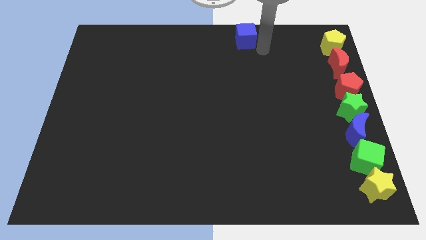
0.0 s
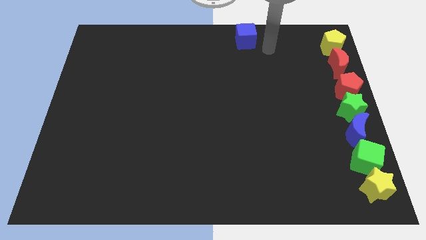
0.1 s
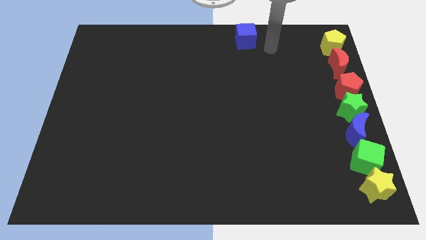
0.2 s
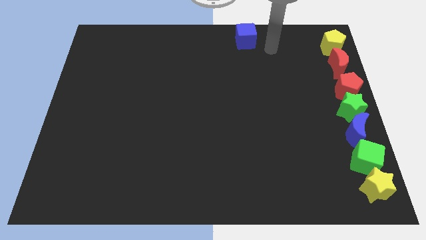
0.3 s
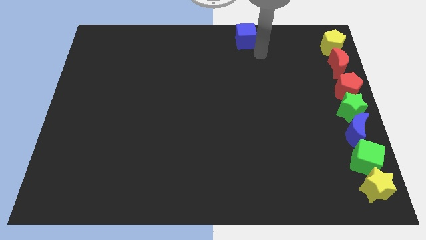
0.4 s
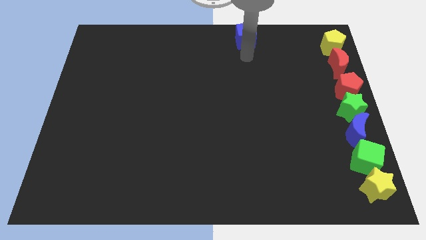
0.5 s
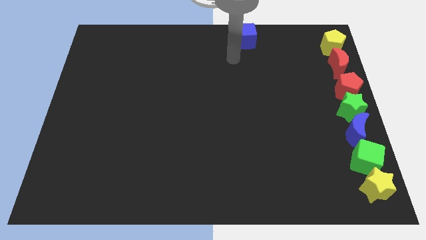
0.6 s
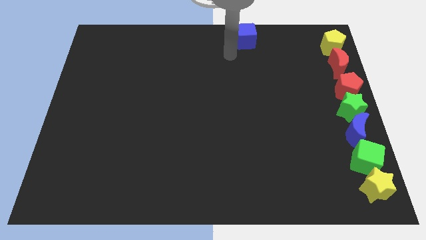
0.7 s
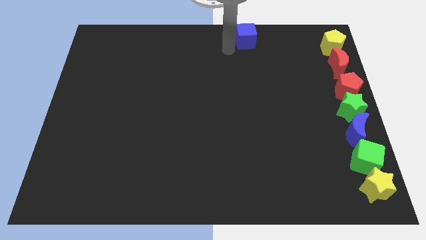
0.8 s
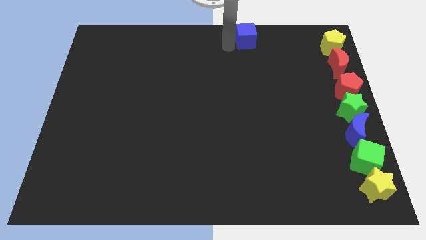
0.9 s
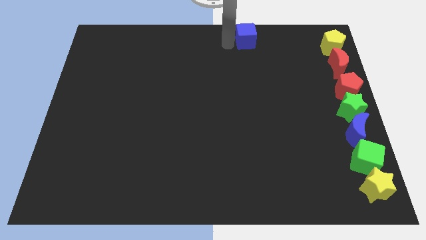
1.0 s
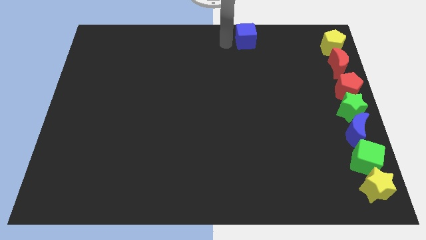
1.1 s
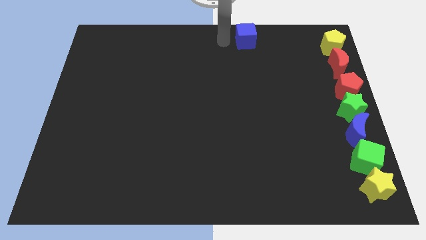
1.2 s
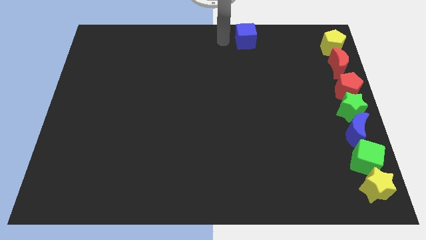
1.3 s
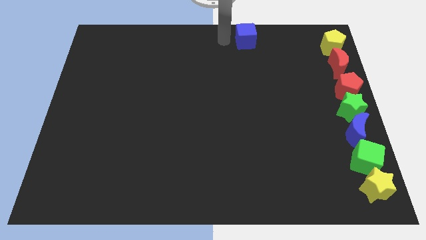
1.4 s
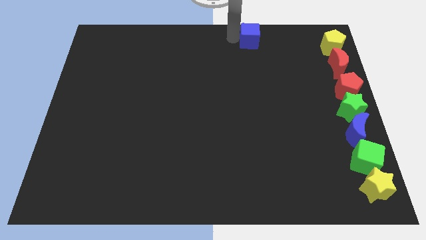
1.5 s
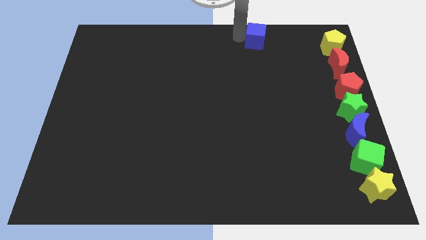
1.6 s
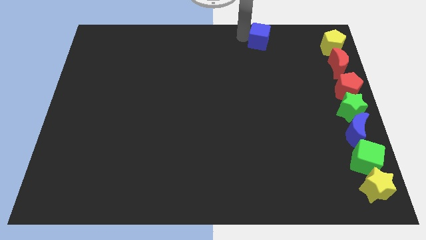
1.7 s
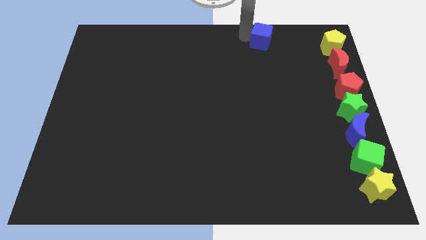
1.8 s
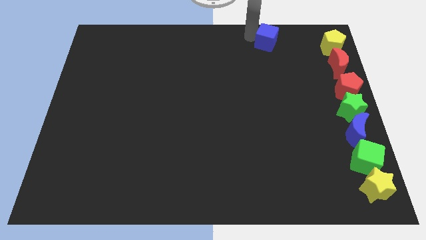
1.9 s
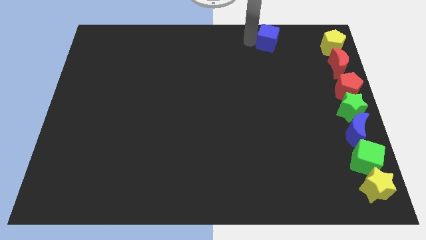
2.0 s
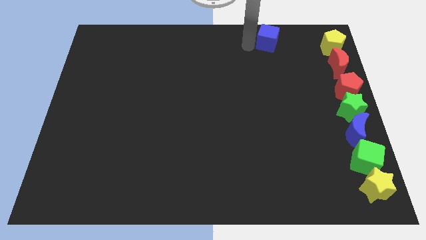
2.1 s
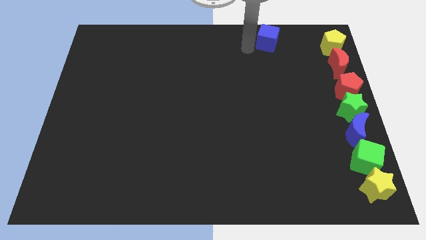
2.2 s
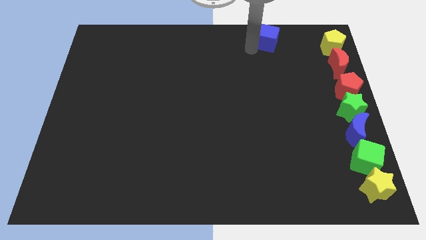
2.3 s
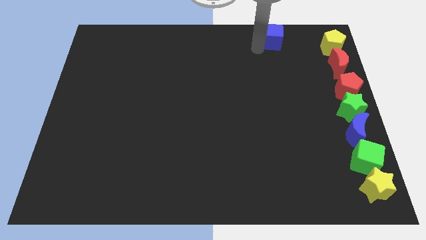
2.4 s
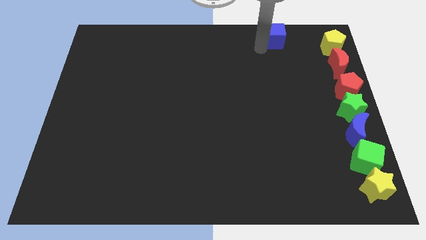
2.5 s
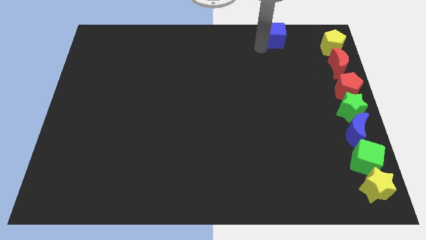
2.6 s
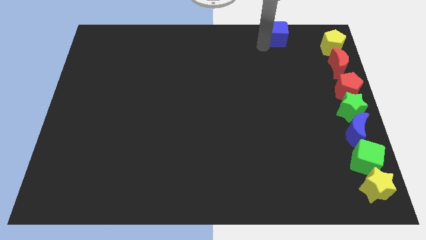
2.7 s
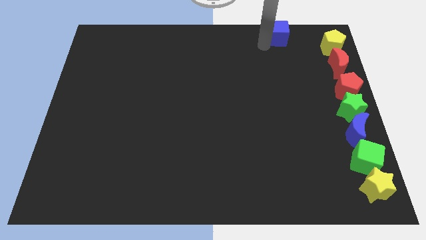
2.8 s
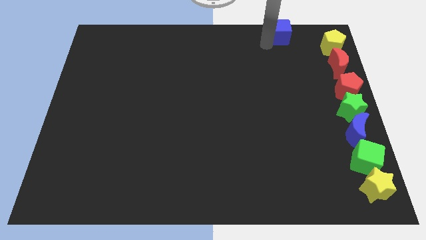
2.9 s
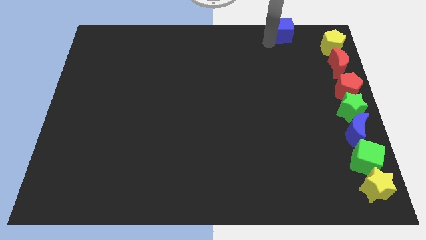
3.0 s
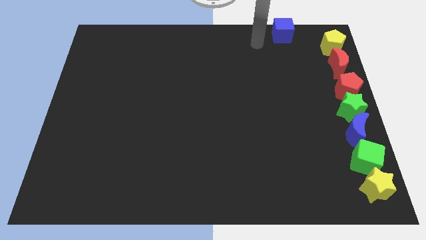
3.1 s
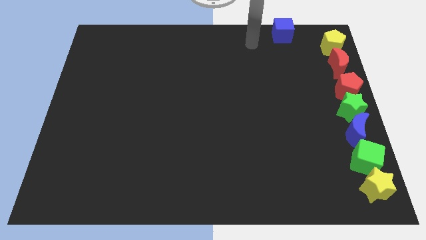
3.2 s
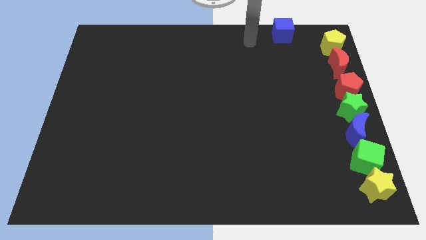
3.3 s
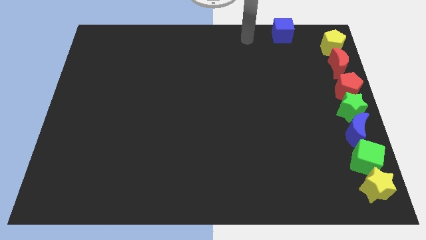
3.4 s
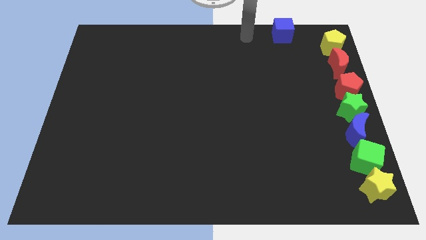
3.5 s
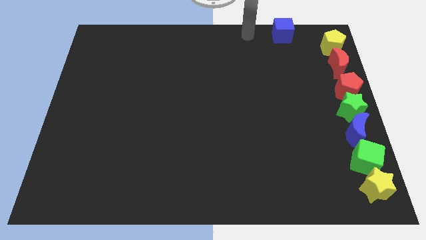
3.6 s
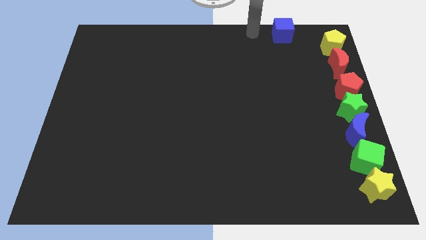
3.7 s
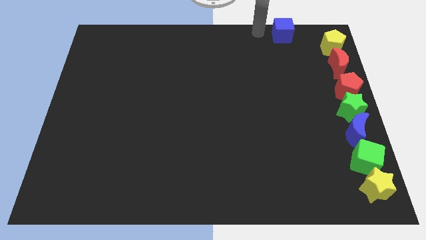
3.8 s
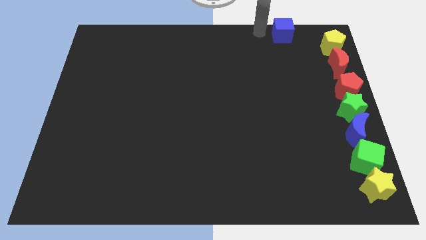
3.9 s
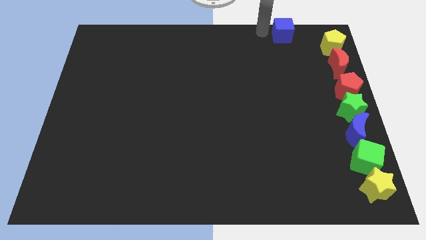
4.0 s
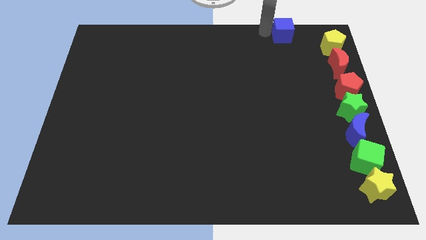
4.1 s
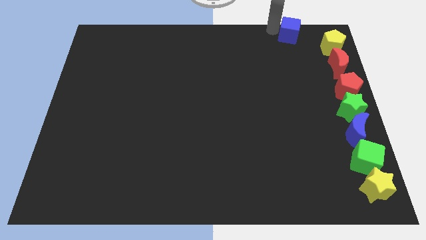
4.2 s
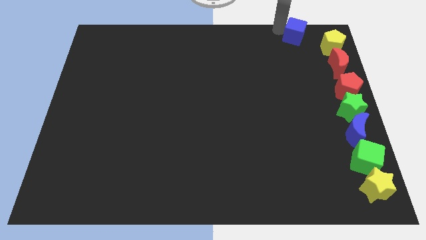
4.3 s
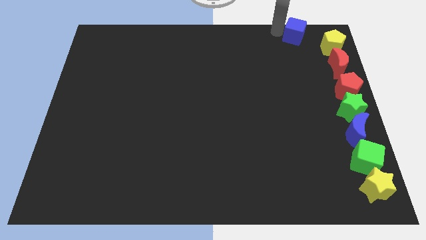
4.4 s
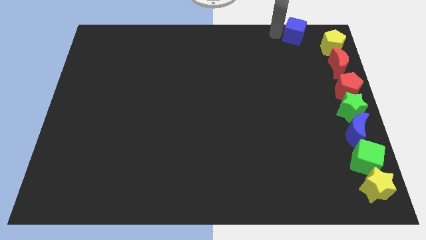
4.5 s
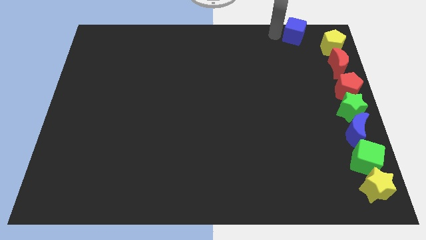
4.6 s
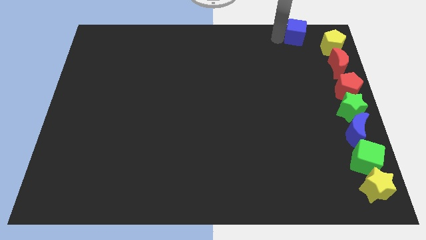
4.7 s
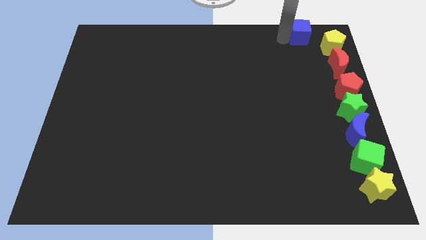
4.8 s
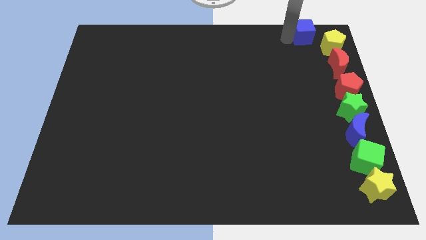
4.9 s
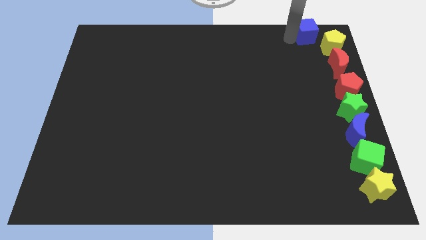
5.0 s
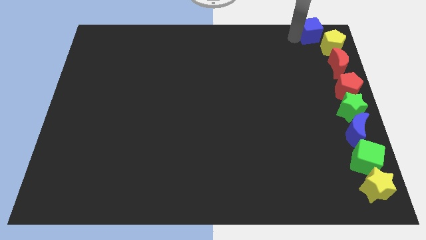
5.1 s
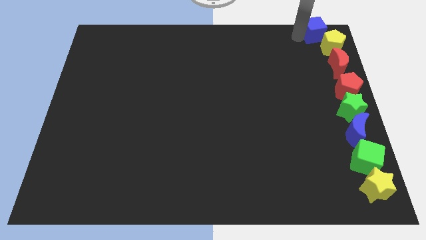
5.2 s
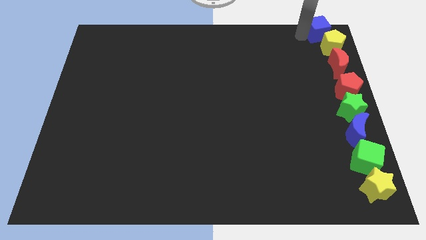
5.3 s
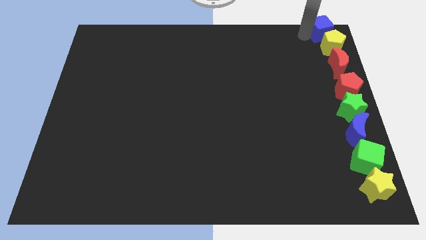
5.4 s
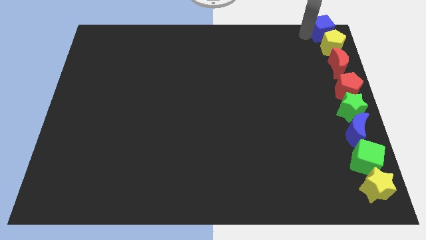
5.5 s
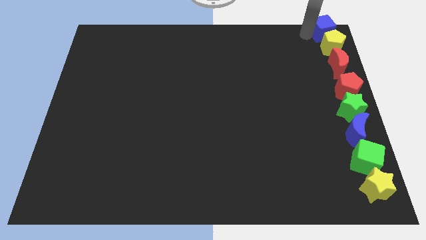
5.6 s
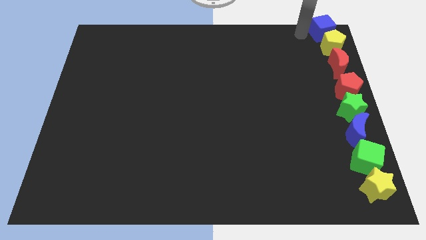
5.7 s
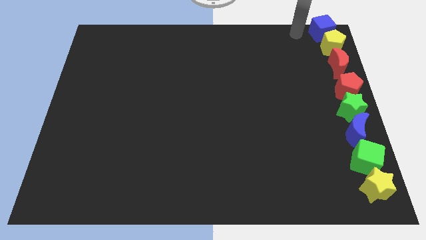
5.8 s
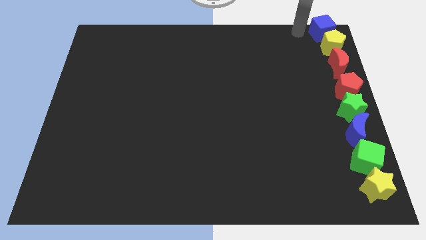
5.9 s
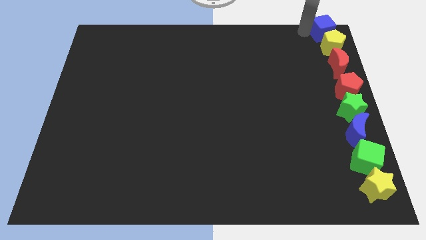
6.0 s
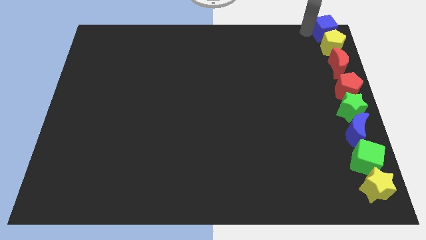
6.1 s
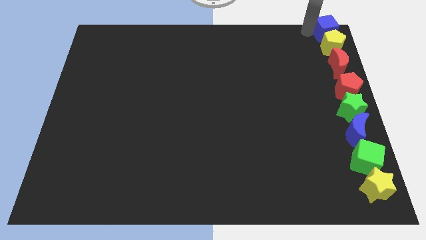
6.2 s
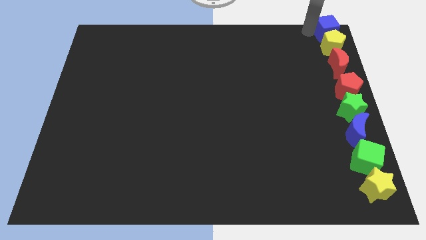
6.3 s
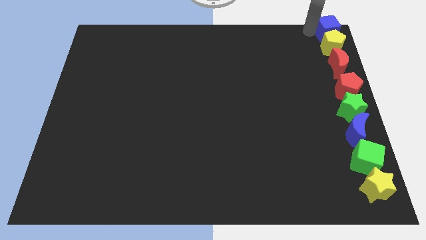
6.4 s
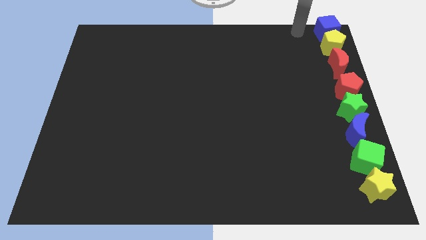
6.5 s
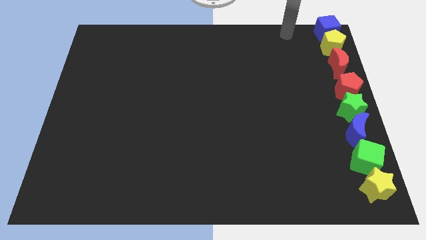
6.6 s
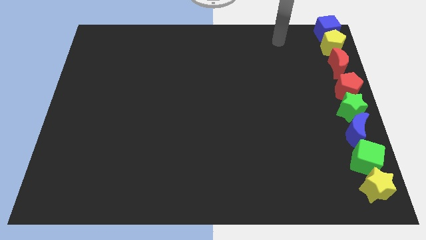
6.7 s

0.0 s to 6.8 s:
place the blue block above the yellow pentagon so that all blocks together make a line

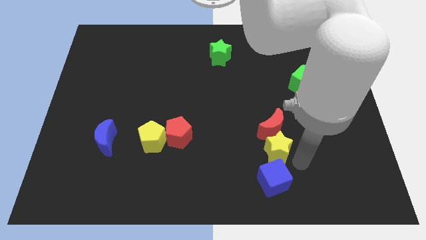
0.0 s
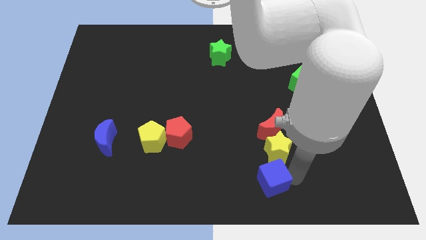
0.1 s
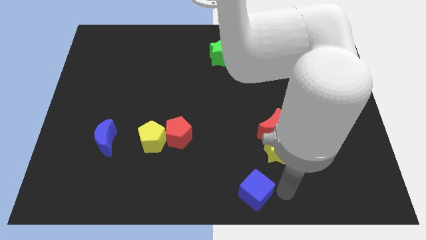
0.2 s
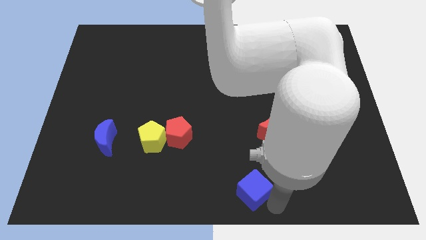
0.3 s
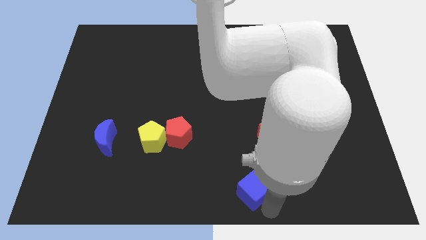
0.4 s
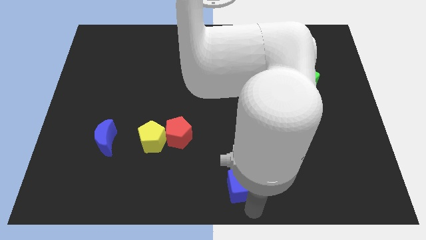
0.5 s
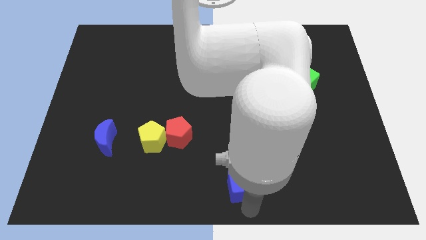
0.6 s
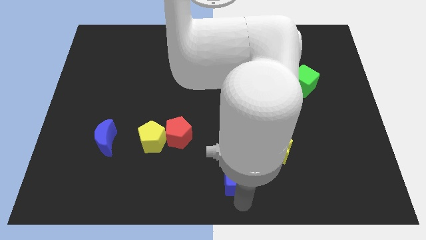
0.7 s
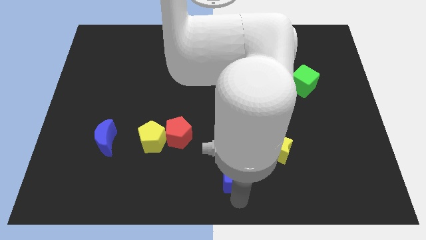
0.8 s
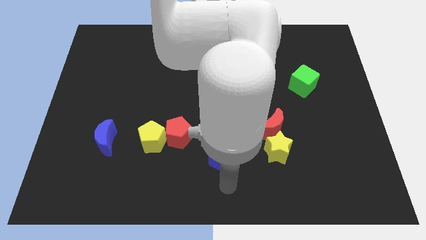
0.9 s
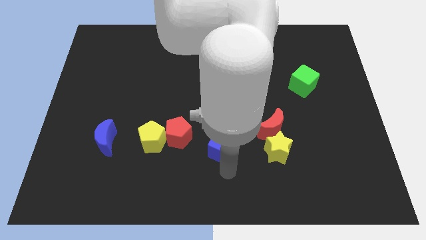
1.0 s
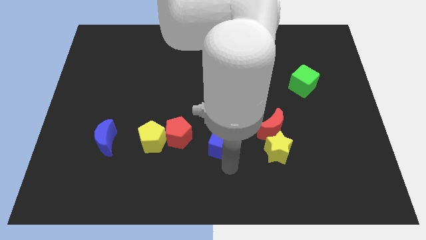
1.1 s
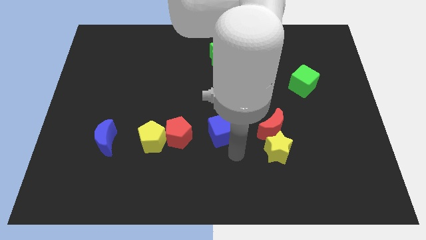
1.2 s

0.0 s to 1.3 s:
move the blue cube between red blocks

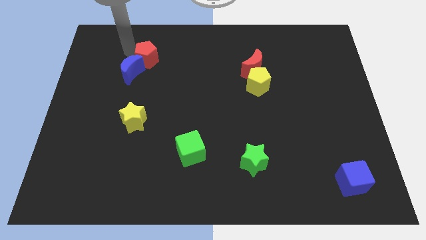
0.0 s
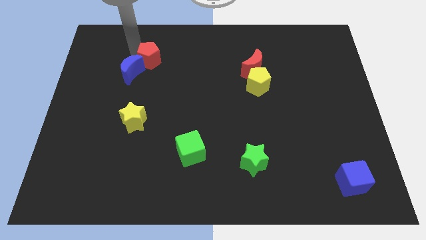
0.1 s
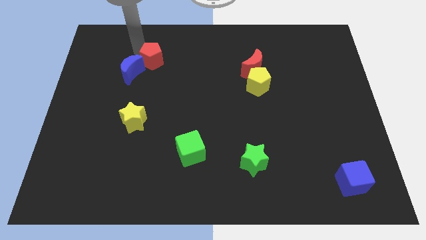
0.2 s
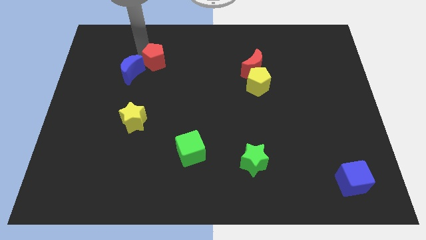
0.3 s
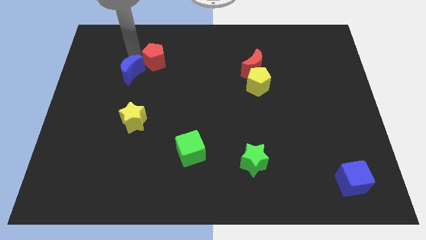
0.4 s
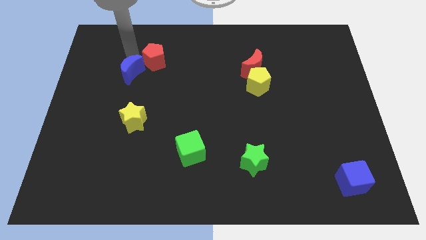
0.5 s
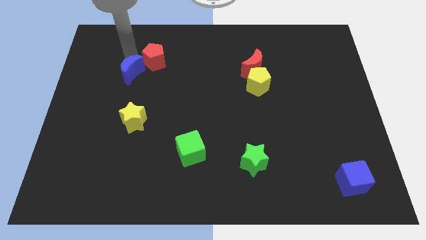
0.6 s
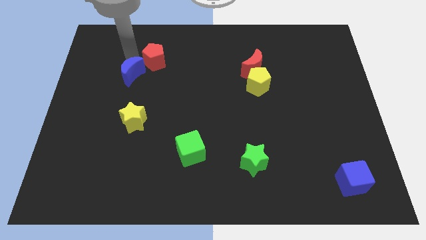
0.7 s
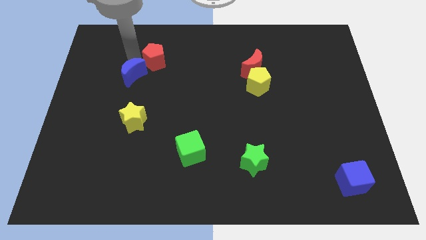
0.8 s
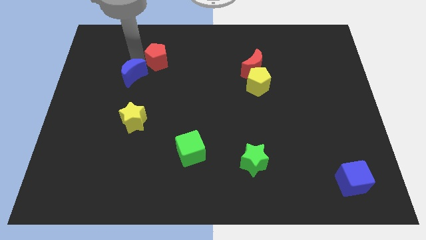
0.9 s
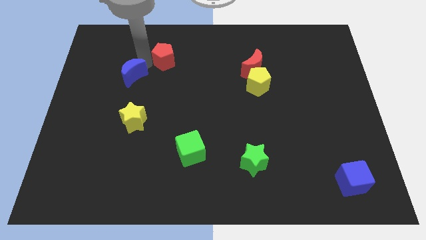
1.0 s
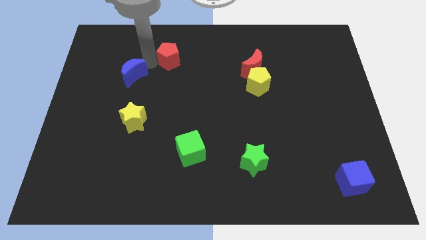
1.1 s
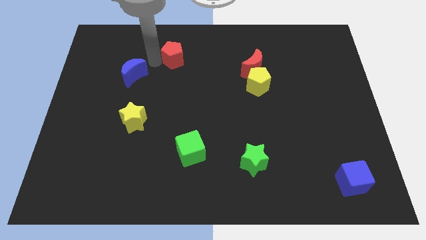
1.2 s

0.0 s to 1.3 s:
point your arm in between red moon and blue moon
